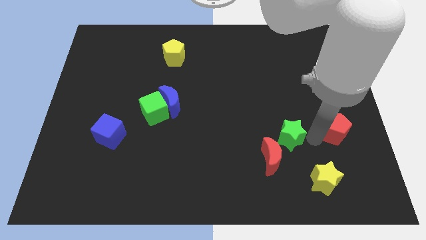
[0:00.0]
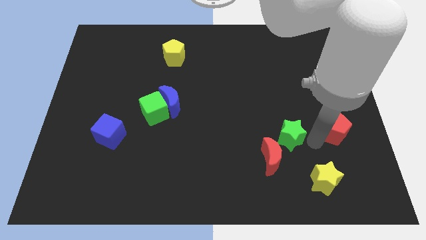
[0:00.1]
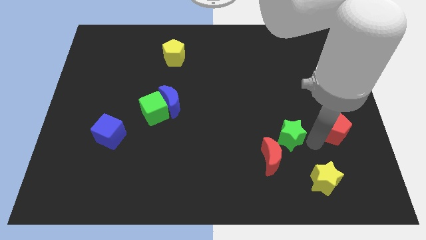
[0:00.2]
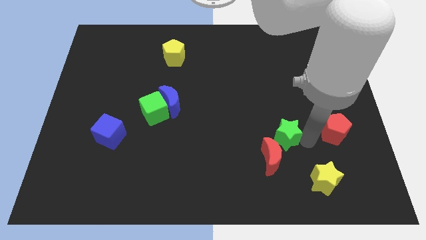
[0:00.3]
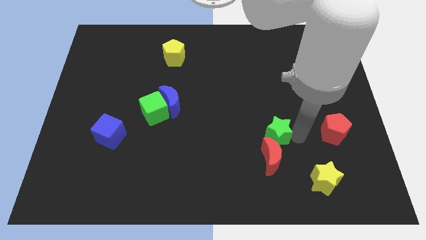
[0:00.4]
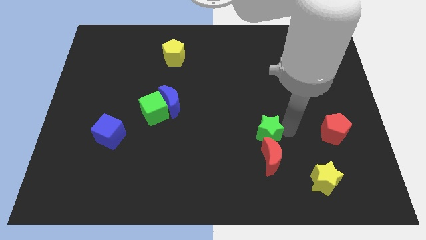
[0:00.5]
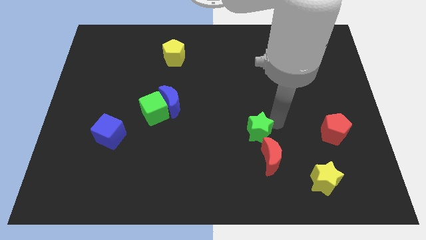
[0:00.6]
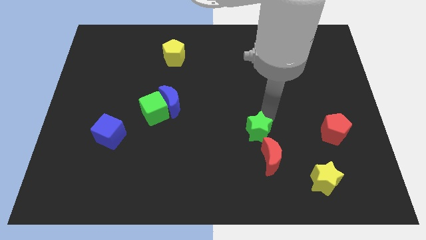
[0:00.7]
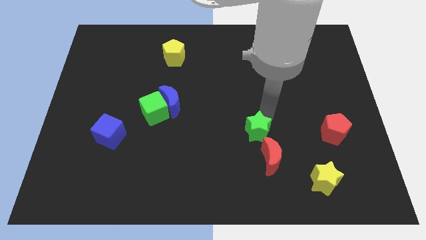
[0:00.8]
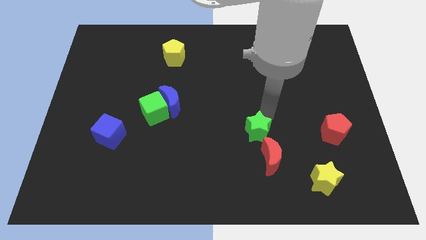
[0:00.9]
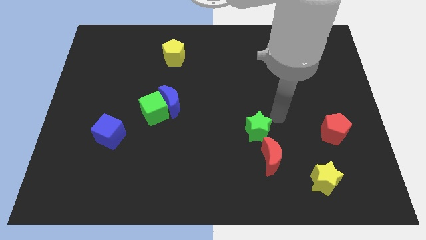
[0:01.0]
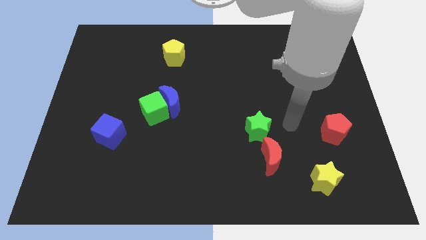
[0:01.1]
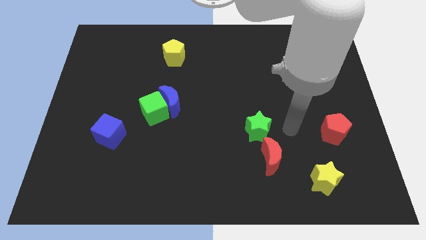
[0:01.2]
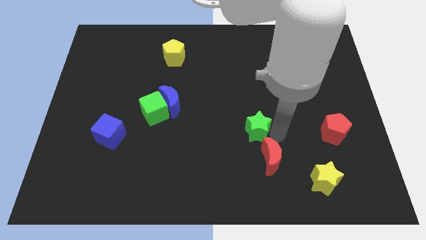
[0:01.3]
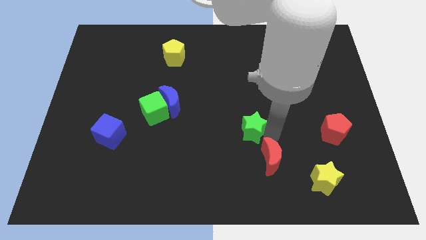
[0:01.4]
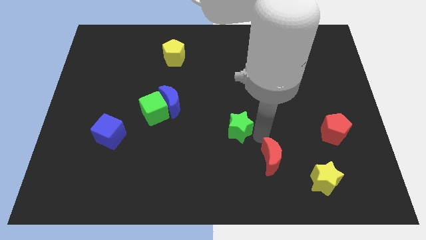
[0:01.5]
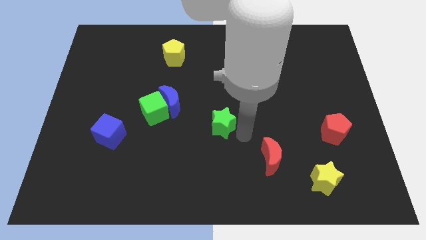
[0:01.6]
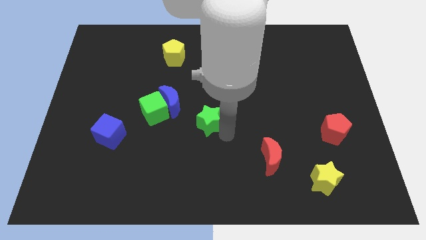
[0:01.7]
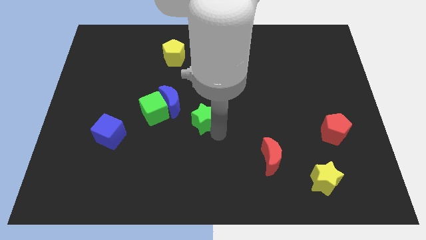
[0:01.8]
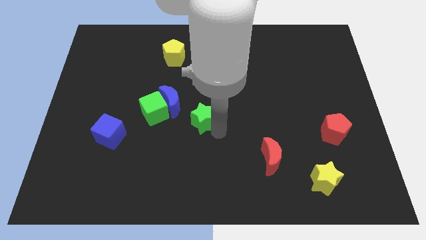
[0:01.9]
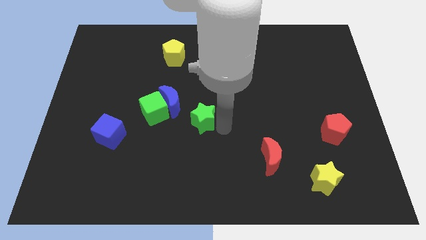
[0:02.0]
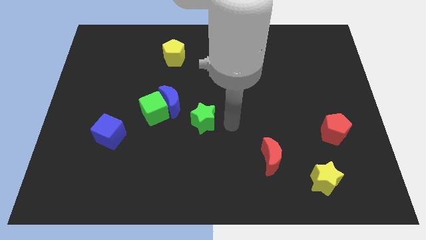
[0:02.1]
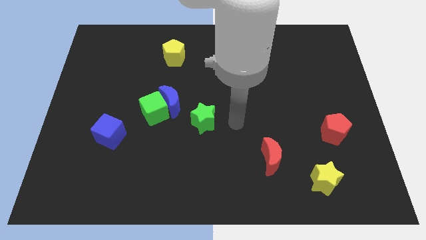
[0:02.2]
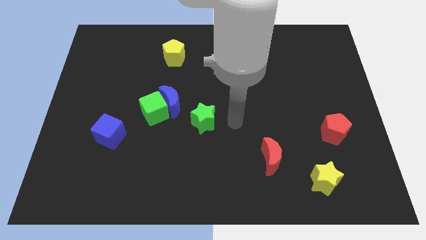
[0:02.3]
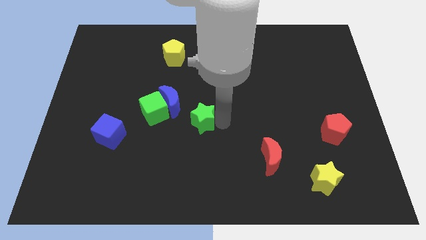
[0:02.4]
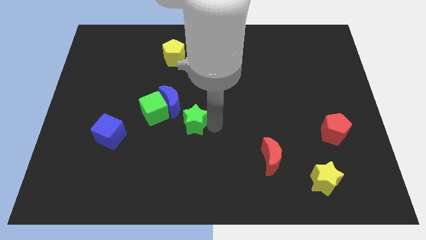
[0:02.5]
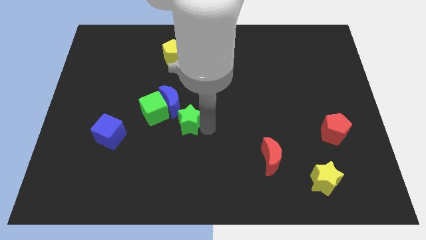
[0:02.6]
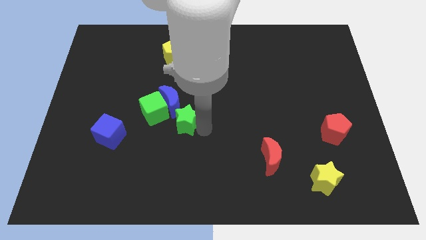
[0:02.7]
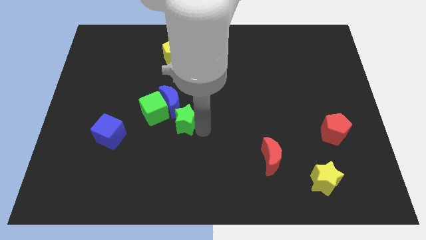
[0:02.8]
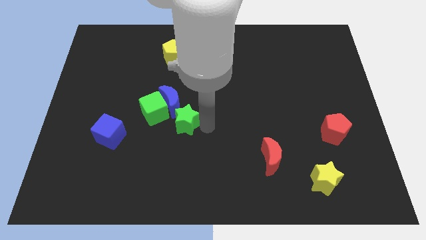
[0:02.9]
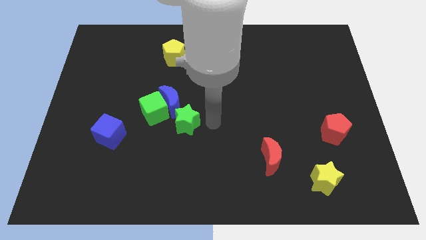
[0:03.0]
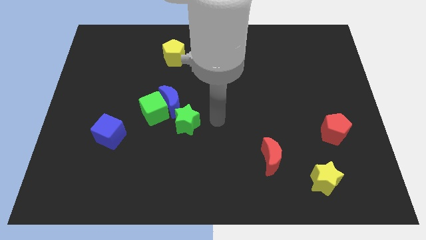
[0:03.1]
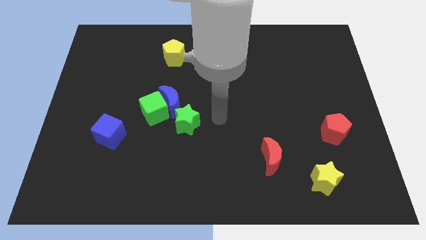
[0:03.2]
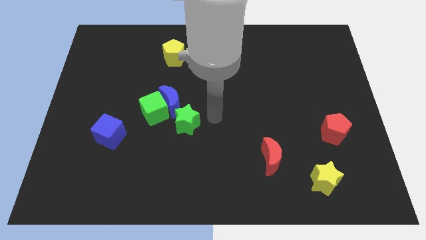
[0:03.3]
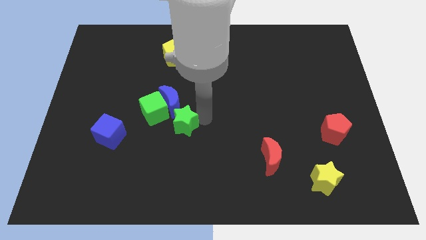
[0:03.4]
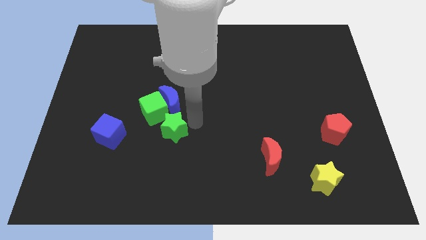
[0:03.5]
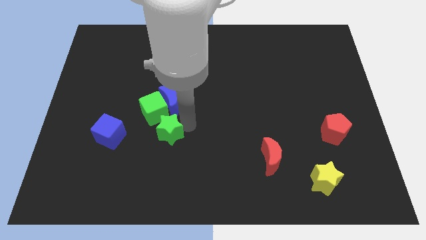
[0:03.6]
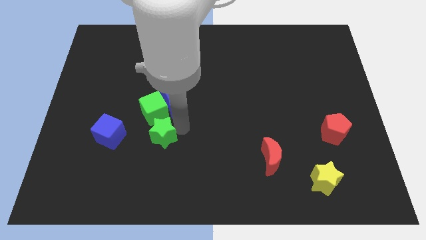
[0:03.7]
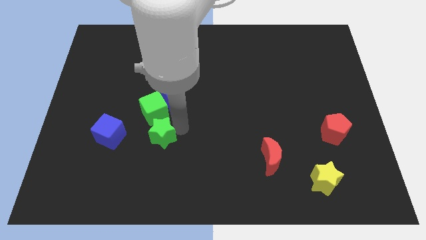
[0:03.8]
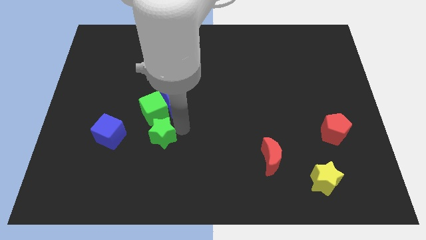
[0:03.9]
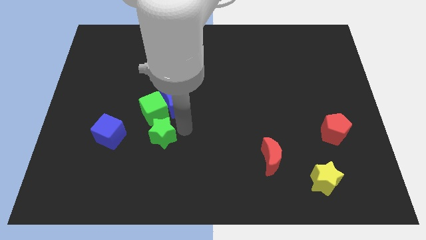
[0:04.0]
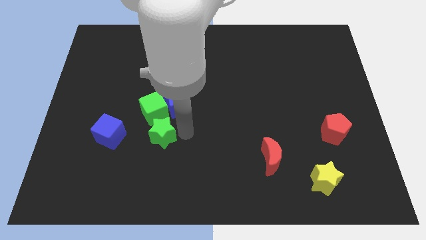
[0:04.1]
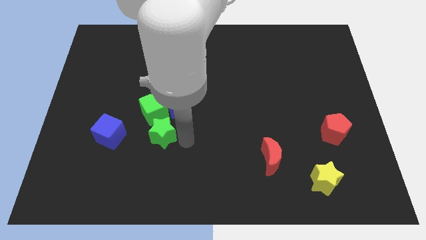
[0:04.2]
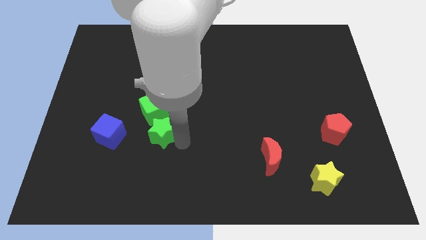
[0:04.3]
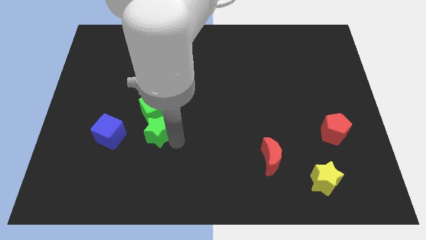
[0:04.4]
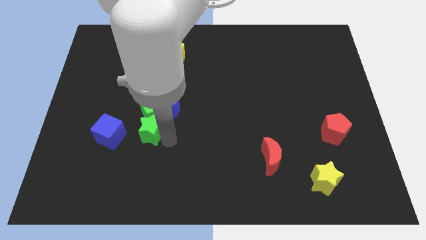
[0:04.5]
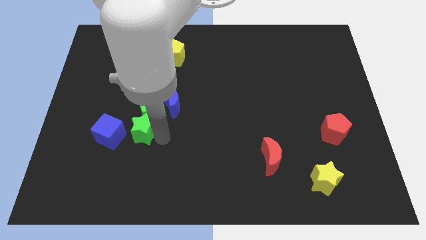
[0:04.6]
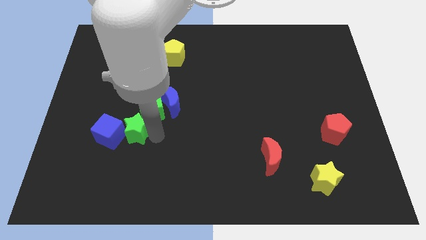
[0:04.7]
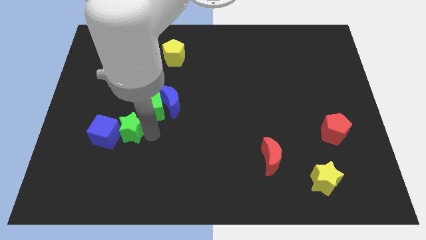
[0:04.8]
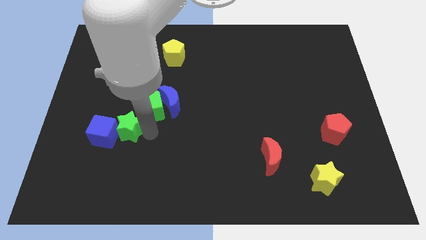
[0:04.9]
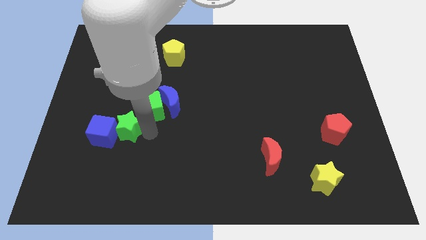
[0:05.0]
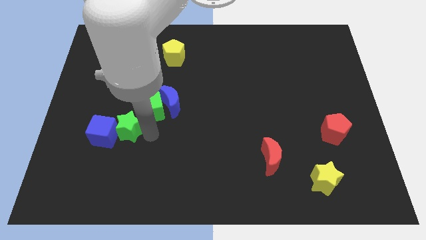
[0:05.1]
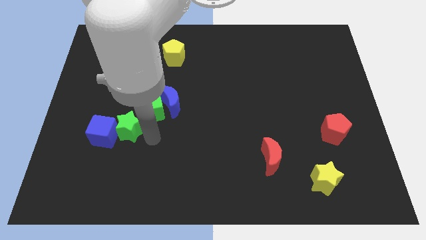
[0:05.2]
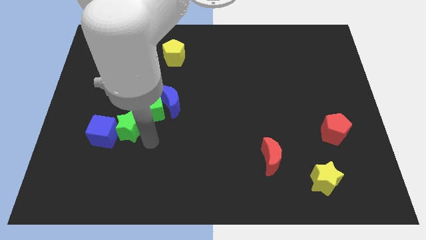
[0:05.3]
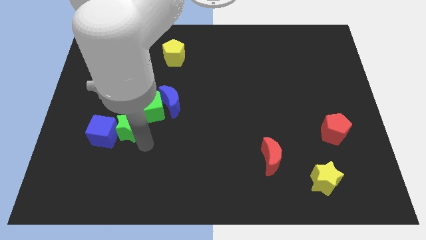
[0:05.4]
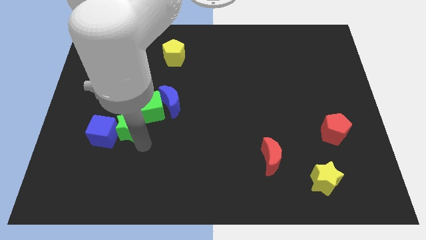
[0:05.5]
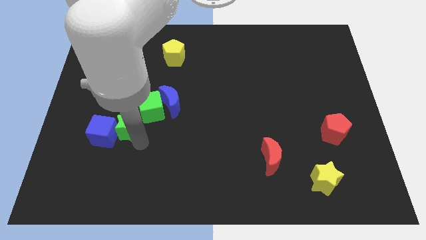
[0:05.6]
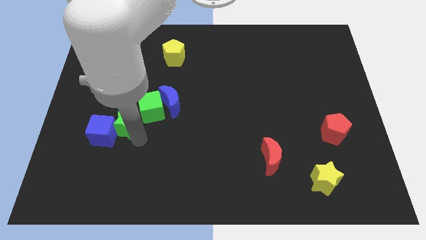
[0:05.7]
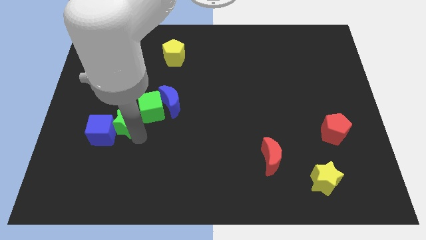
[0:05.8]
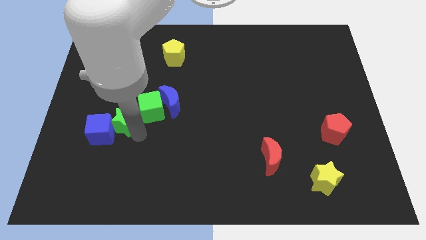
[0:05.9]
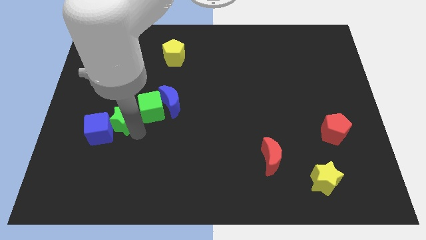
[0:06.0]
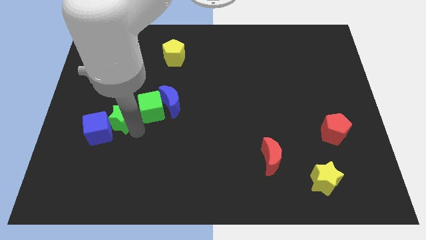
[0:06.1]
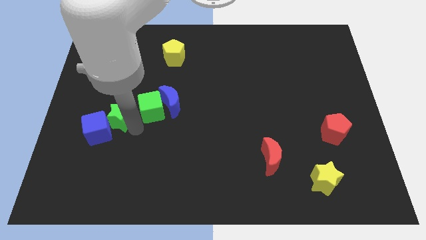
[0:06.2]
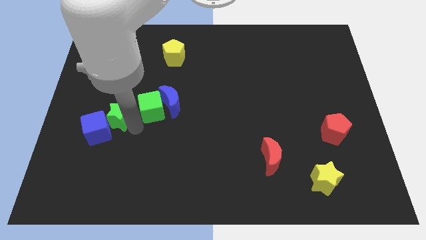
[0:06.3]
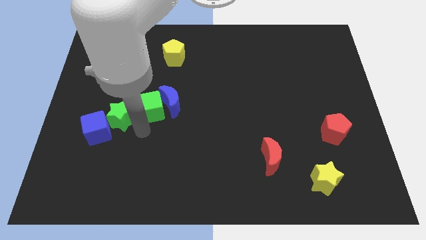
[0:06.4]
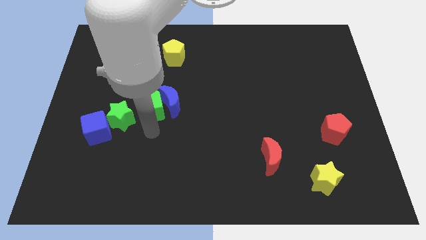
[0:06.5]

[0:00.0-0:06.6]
place the green star in between blue cube and green cube

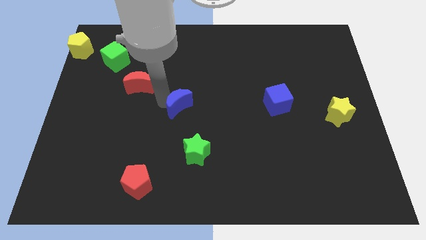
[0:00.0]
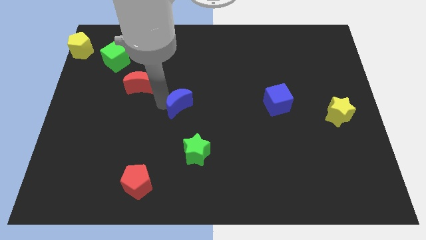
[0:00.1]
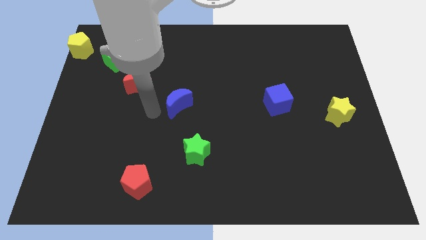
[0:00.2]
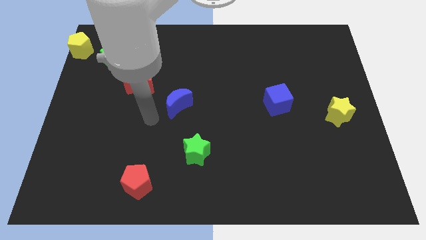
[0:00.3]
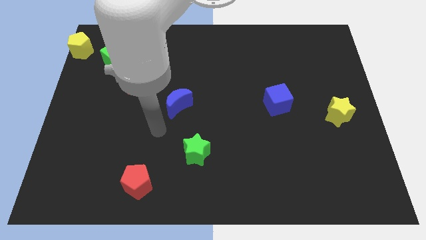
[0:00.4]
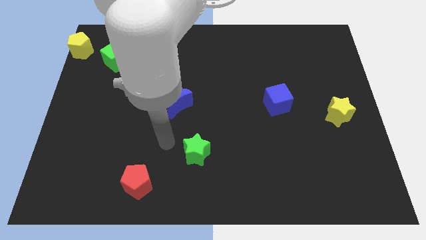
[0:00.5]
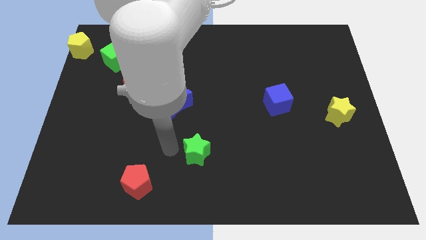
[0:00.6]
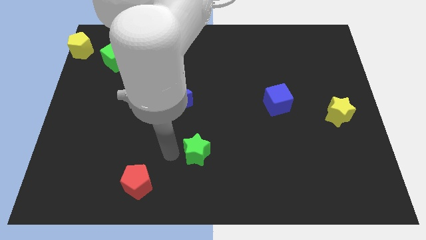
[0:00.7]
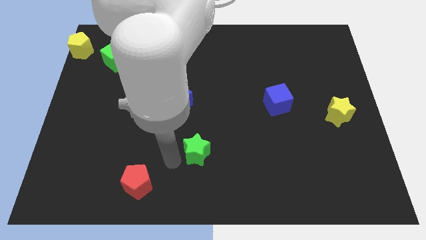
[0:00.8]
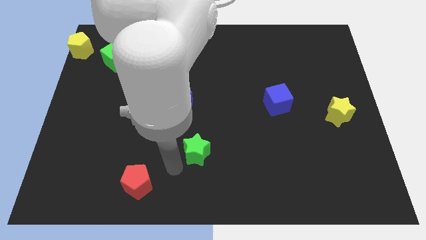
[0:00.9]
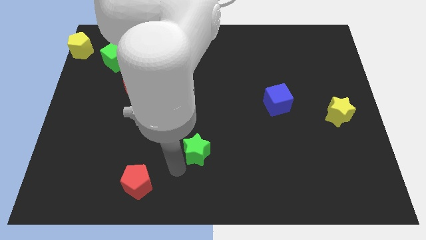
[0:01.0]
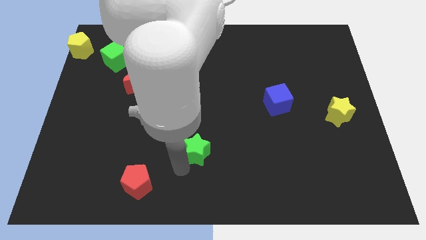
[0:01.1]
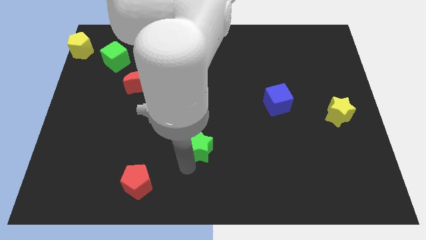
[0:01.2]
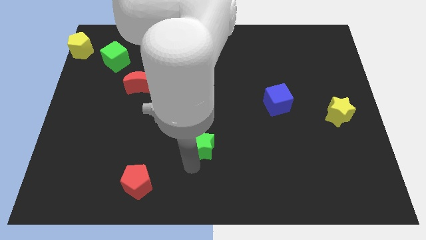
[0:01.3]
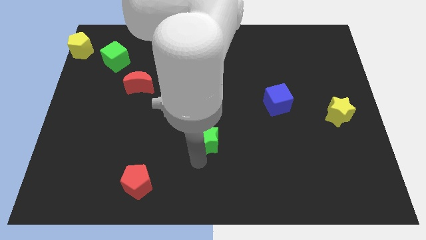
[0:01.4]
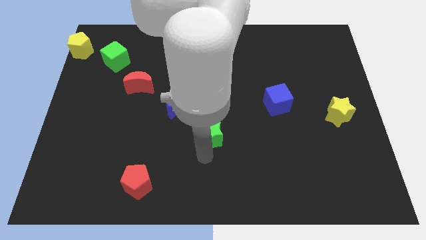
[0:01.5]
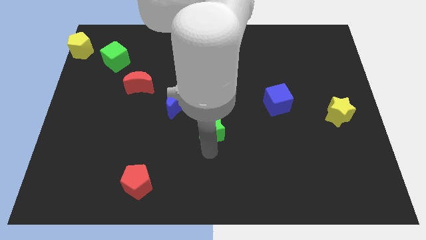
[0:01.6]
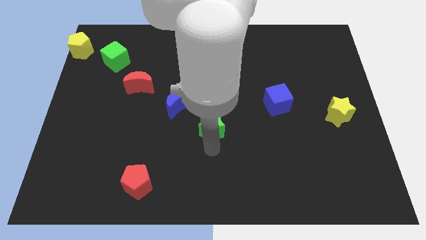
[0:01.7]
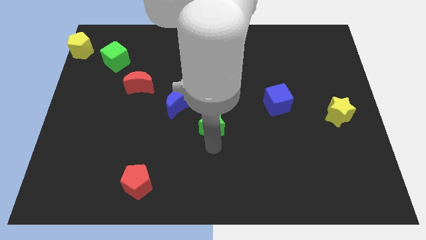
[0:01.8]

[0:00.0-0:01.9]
place the green star at the center

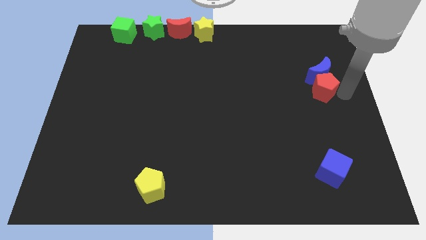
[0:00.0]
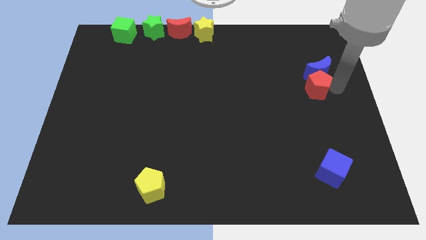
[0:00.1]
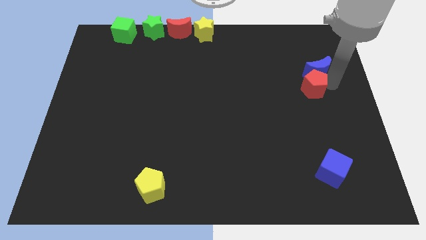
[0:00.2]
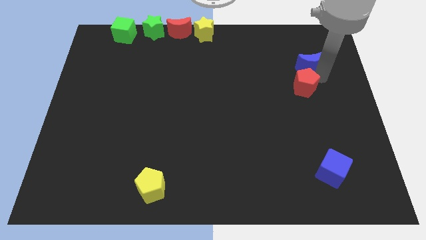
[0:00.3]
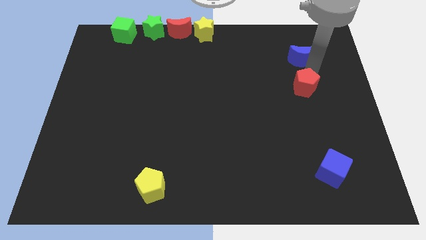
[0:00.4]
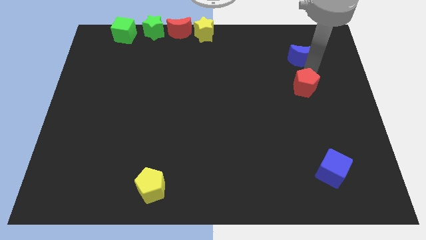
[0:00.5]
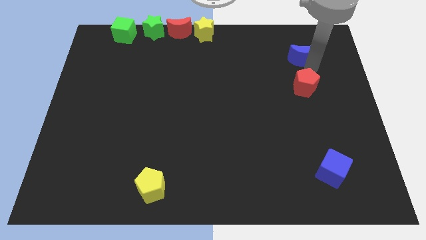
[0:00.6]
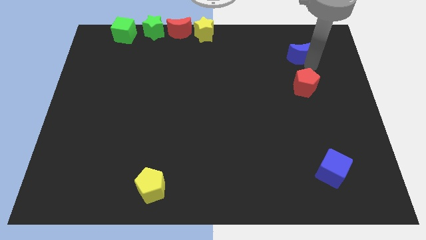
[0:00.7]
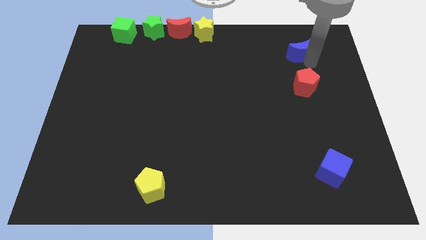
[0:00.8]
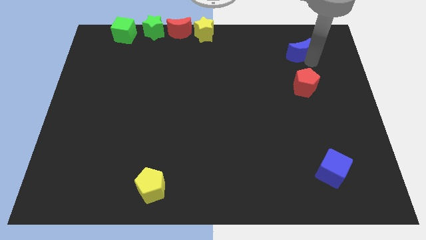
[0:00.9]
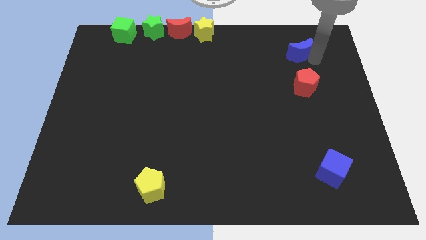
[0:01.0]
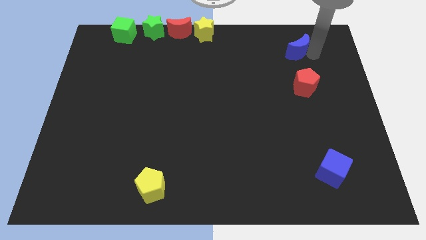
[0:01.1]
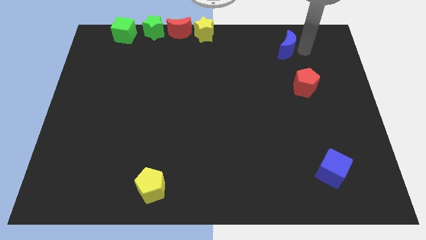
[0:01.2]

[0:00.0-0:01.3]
separate the red pentagon and blue crescent from each other
